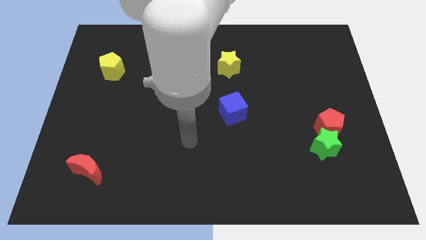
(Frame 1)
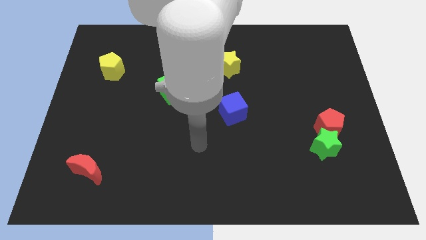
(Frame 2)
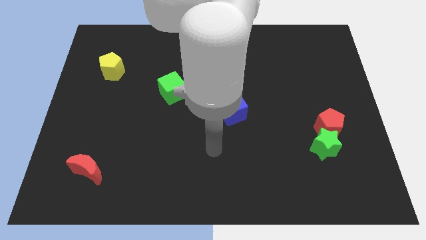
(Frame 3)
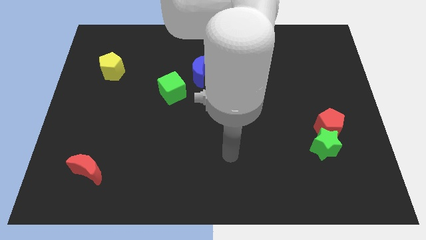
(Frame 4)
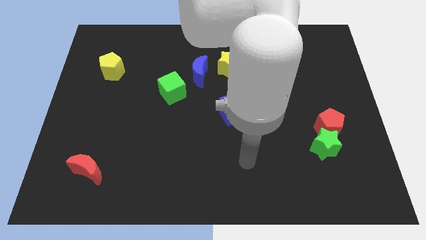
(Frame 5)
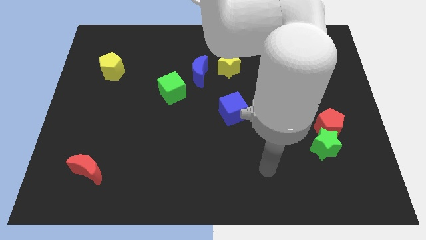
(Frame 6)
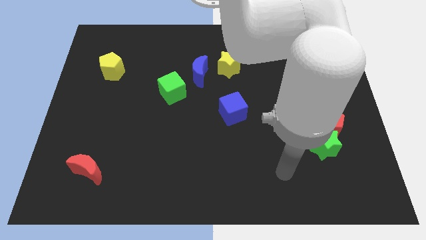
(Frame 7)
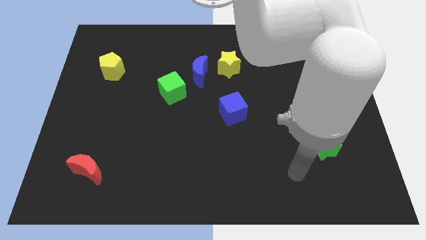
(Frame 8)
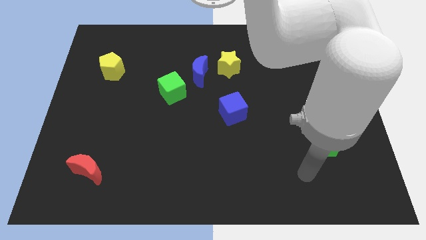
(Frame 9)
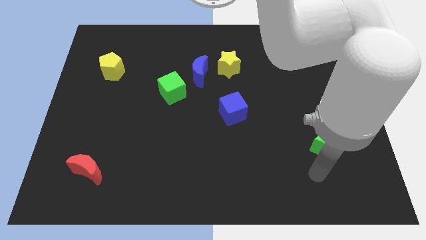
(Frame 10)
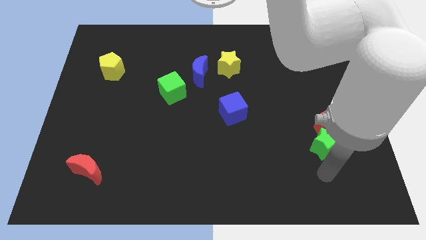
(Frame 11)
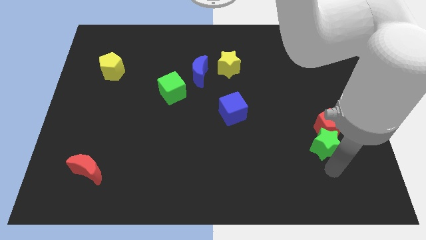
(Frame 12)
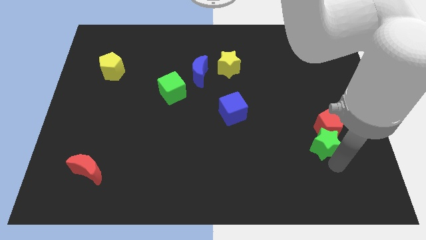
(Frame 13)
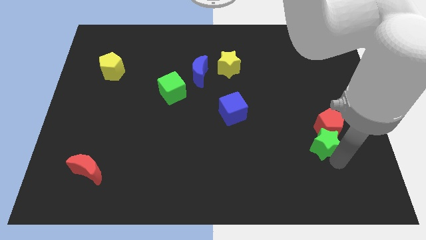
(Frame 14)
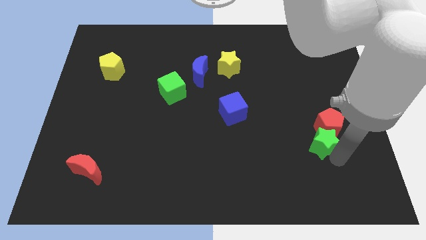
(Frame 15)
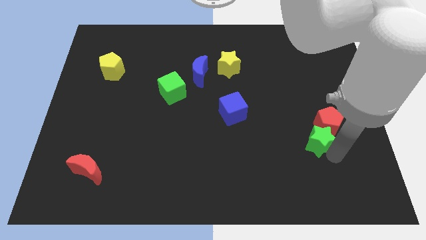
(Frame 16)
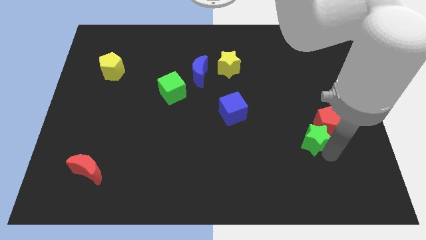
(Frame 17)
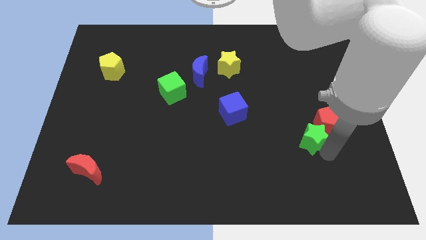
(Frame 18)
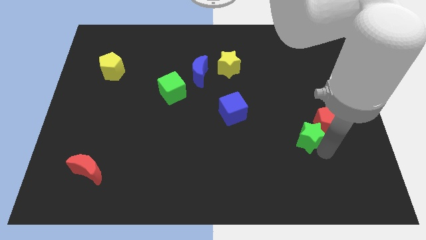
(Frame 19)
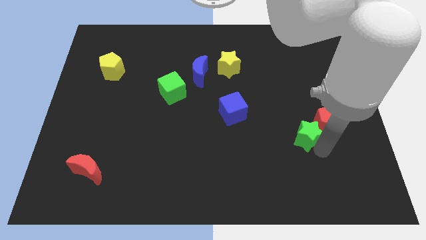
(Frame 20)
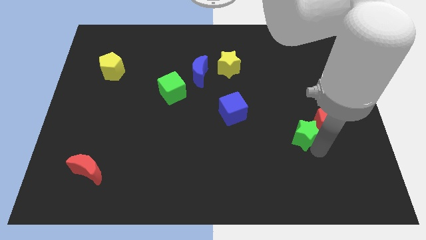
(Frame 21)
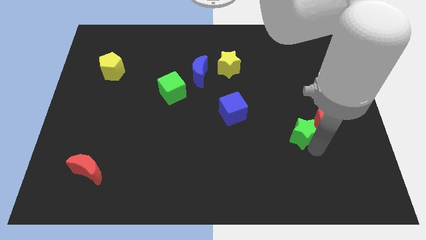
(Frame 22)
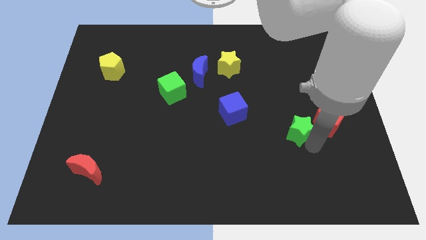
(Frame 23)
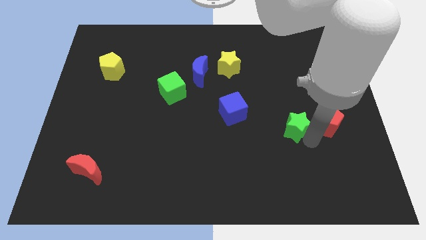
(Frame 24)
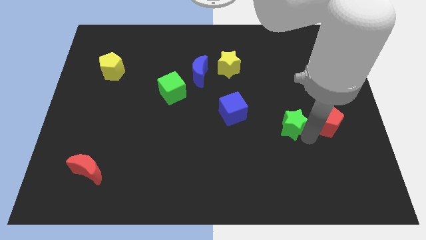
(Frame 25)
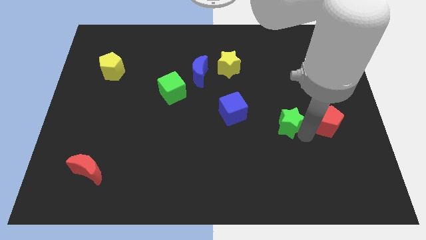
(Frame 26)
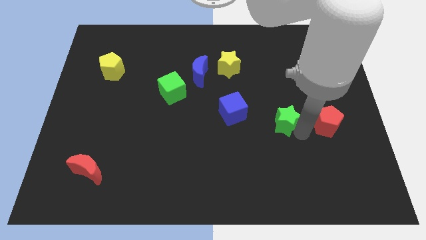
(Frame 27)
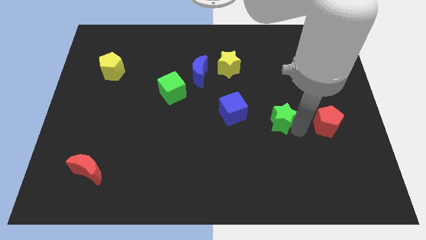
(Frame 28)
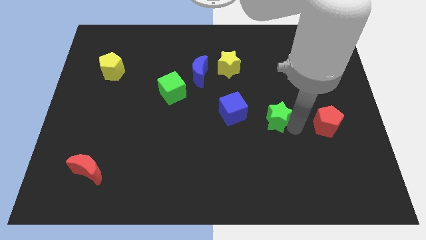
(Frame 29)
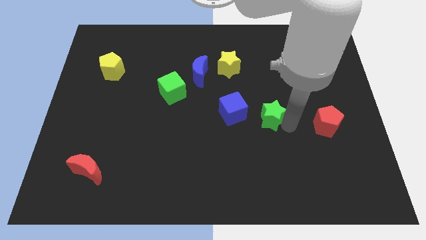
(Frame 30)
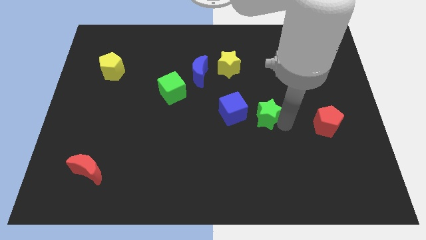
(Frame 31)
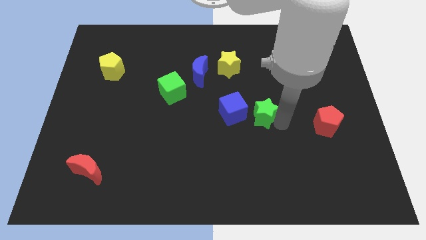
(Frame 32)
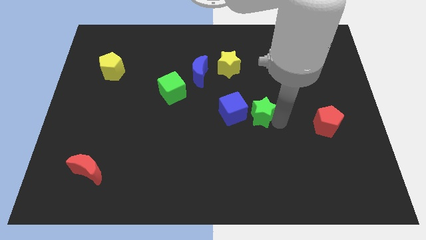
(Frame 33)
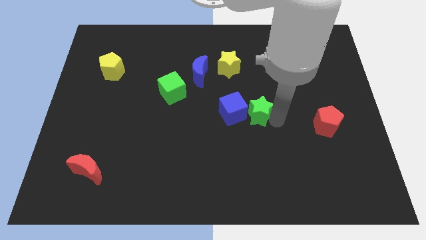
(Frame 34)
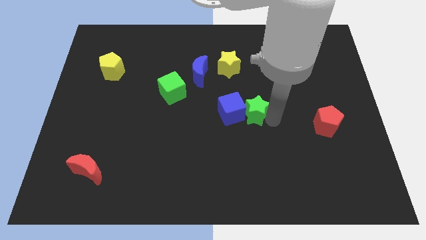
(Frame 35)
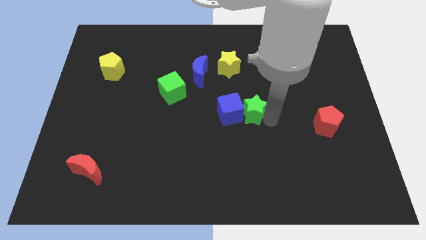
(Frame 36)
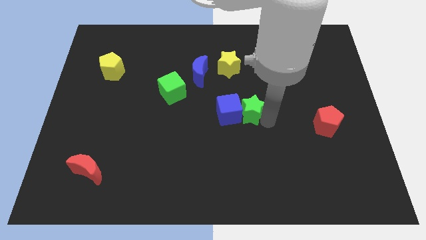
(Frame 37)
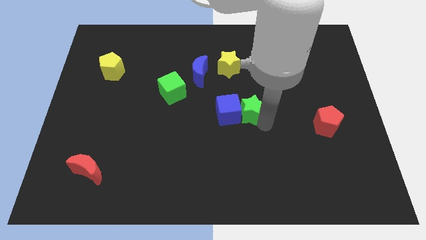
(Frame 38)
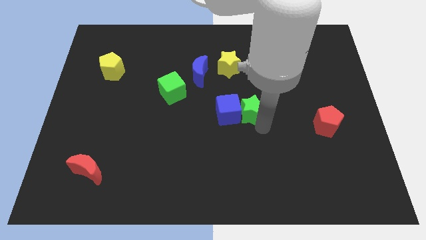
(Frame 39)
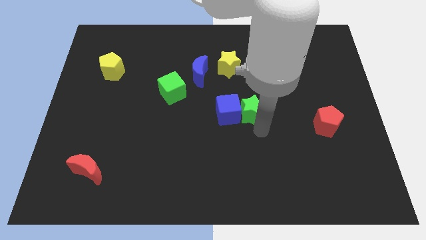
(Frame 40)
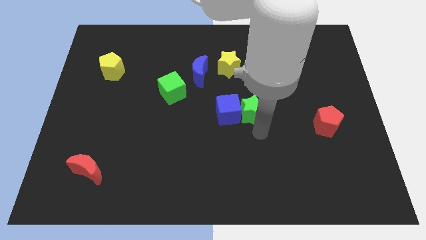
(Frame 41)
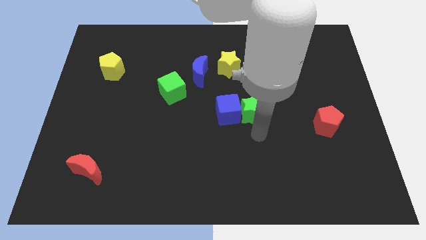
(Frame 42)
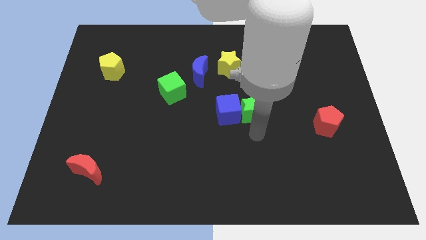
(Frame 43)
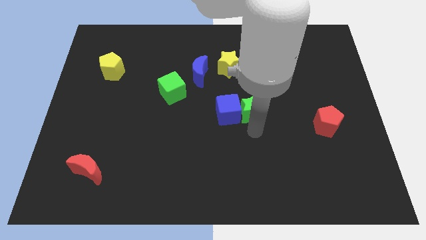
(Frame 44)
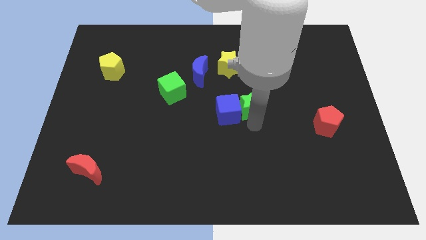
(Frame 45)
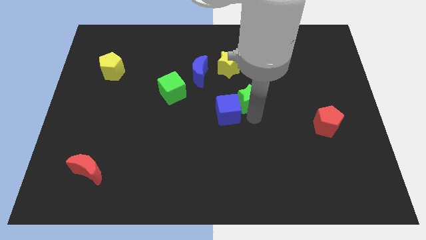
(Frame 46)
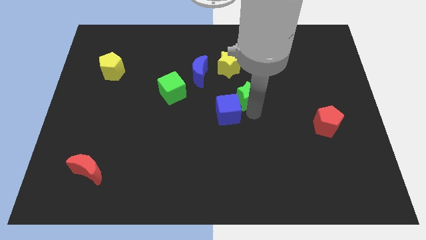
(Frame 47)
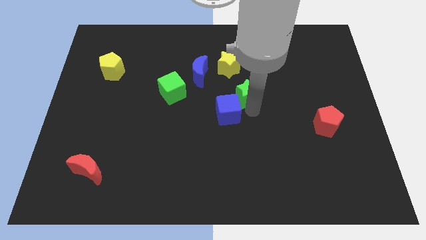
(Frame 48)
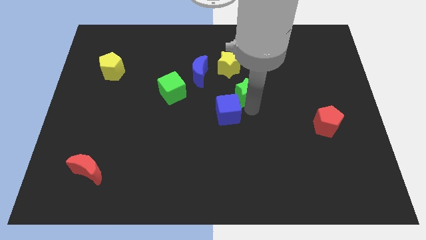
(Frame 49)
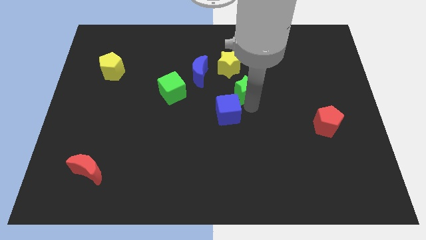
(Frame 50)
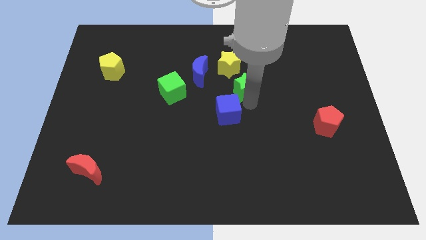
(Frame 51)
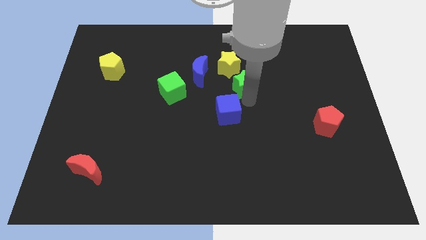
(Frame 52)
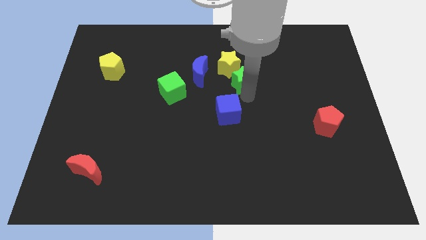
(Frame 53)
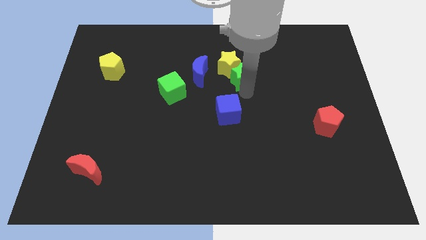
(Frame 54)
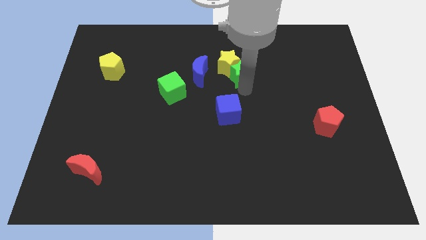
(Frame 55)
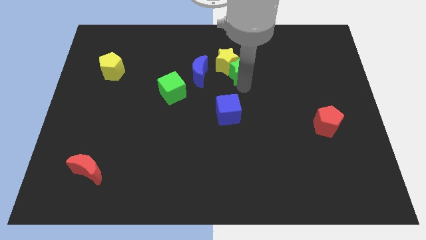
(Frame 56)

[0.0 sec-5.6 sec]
put the green star to the yellow star

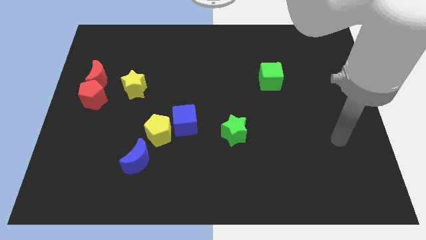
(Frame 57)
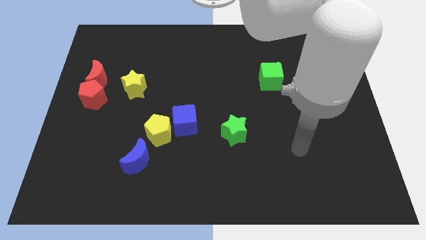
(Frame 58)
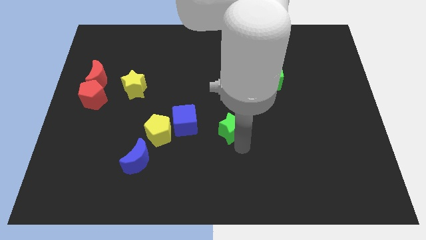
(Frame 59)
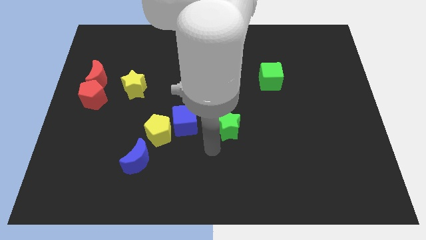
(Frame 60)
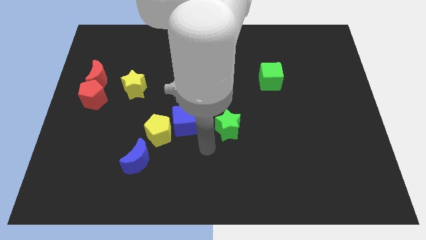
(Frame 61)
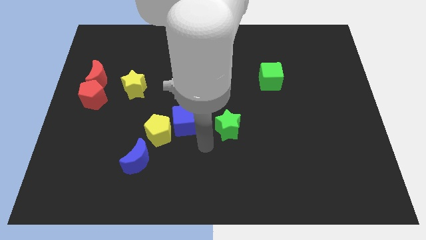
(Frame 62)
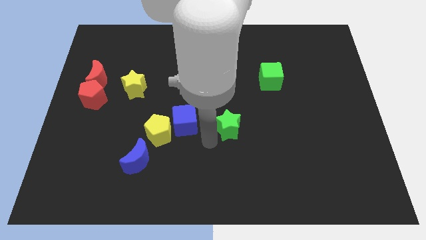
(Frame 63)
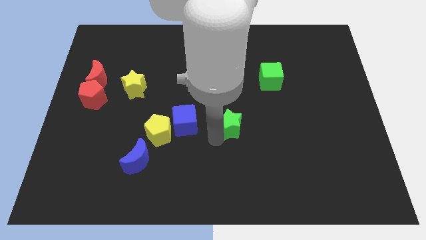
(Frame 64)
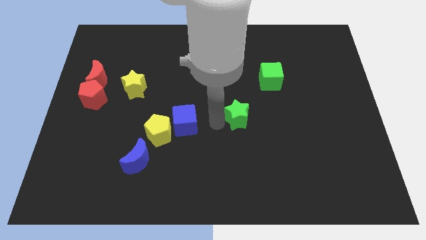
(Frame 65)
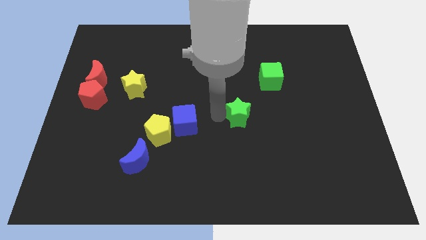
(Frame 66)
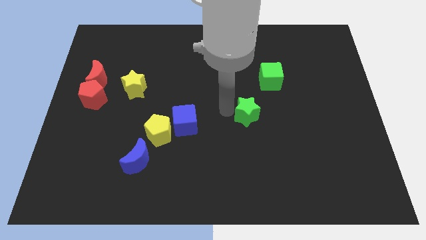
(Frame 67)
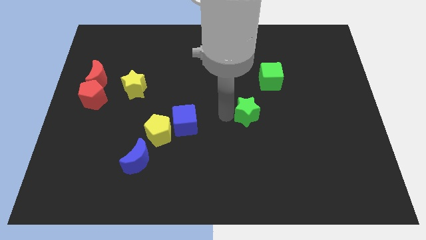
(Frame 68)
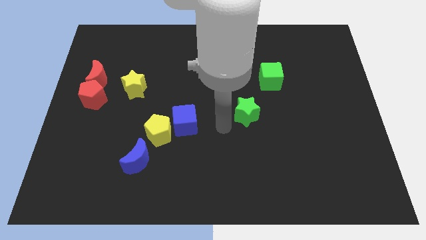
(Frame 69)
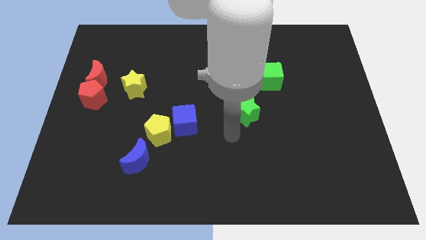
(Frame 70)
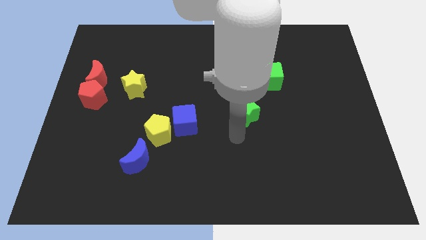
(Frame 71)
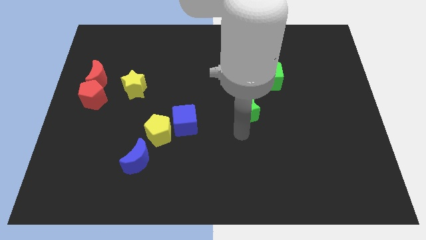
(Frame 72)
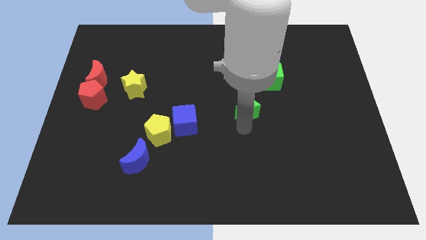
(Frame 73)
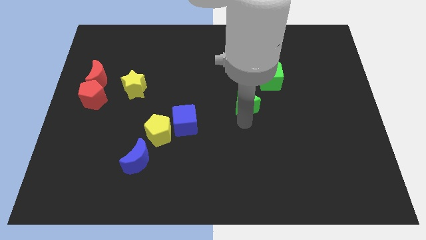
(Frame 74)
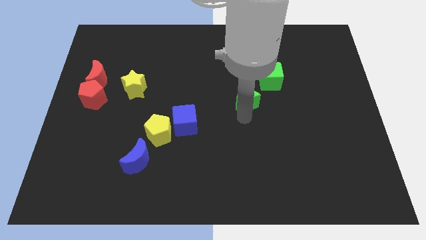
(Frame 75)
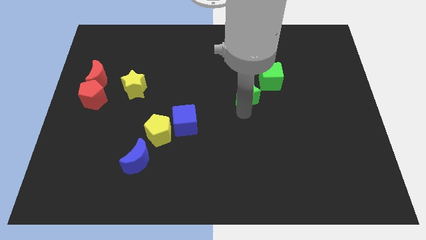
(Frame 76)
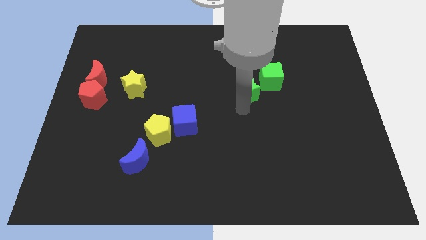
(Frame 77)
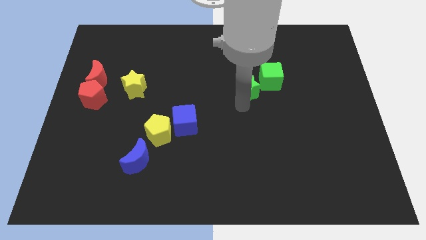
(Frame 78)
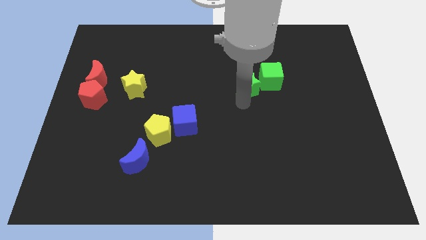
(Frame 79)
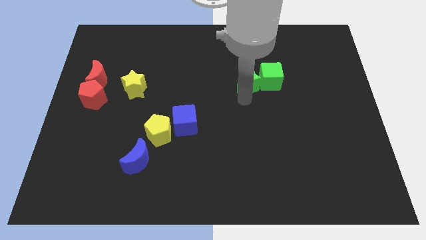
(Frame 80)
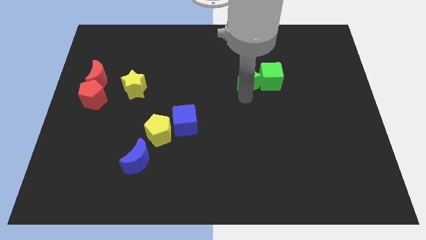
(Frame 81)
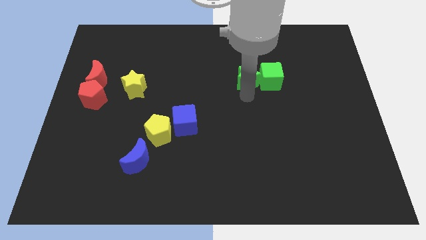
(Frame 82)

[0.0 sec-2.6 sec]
put the green star next to the green cube

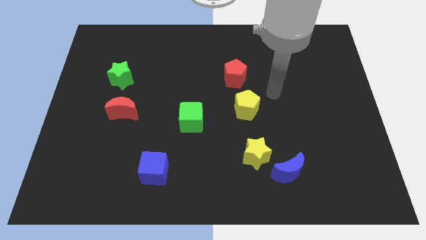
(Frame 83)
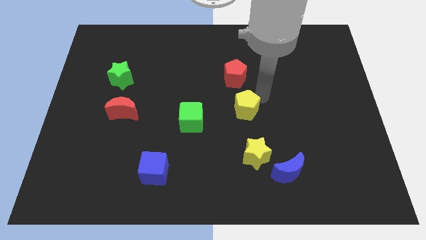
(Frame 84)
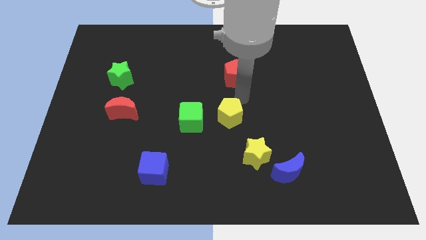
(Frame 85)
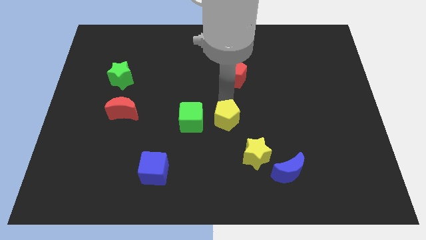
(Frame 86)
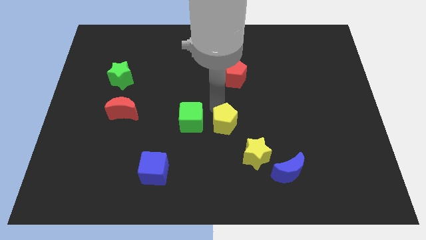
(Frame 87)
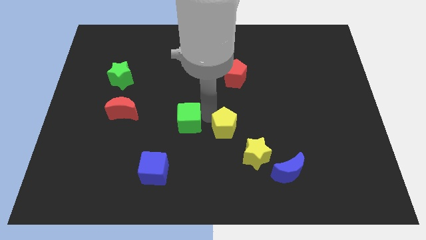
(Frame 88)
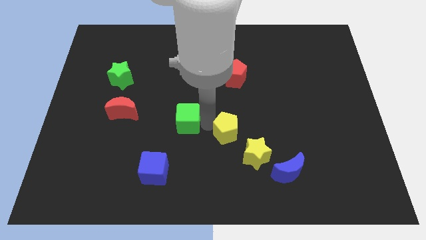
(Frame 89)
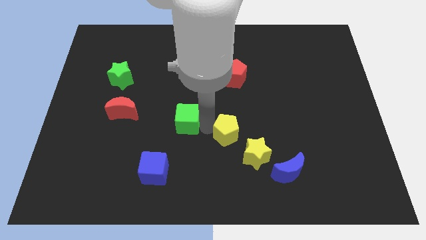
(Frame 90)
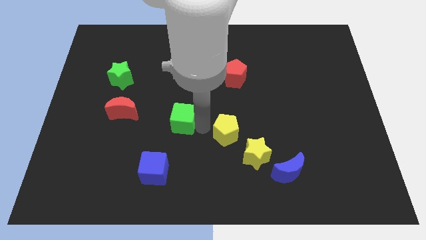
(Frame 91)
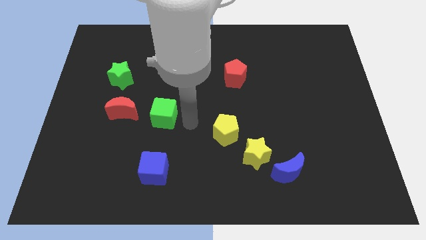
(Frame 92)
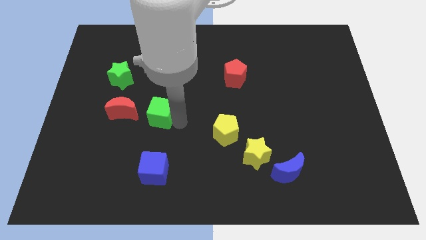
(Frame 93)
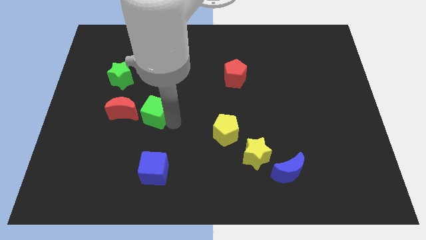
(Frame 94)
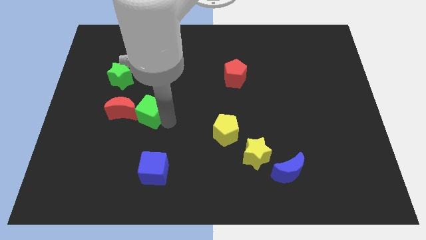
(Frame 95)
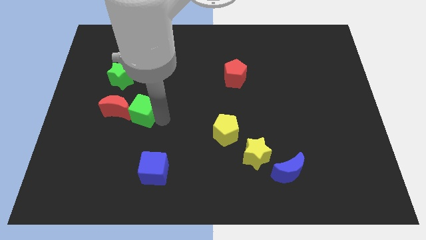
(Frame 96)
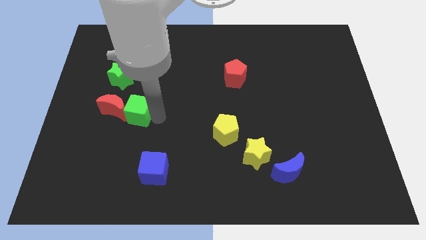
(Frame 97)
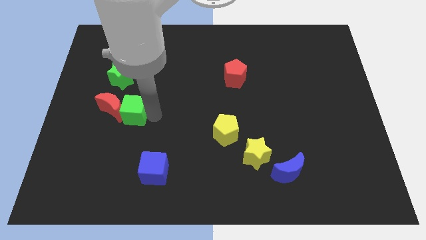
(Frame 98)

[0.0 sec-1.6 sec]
move the green cube towards the red moon
